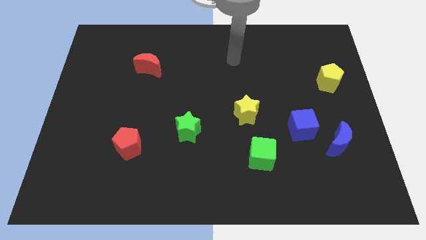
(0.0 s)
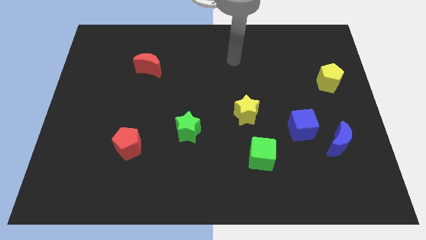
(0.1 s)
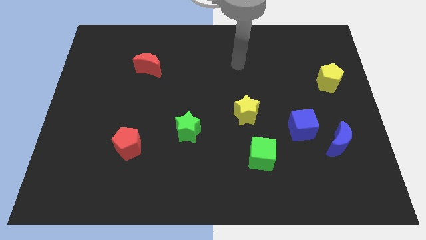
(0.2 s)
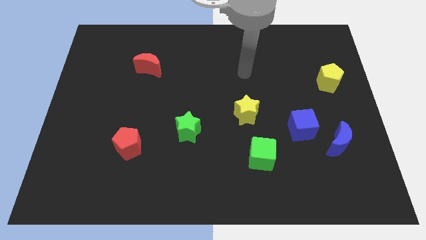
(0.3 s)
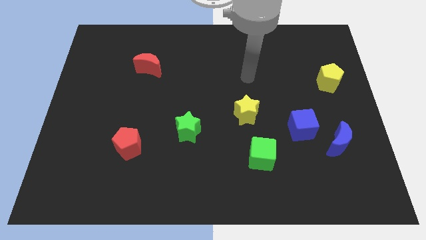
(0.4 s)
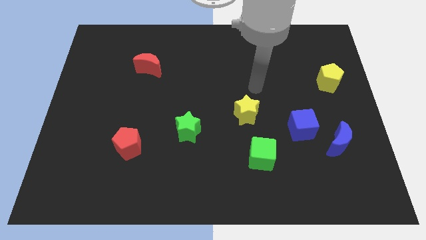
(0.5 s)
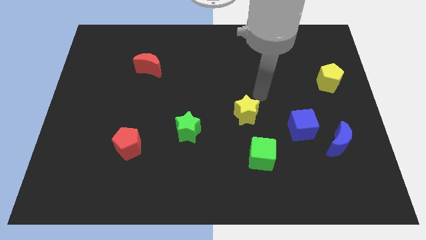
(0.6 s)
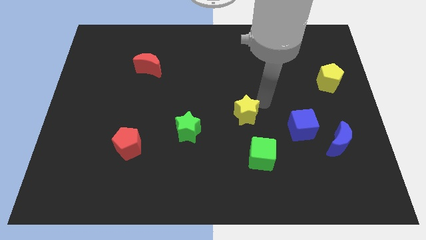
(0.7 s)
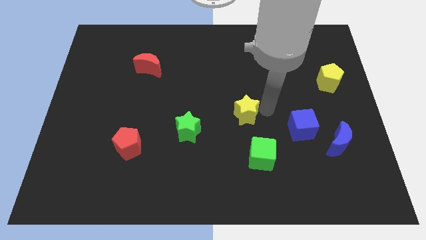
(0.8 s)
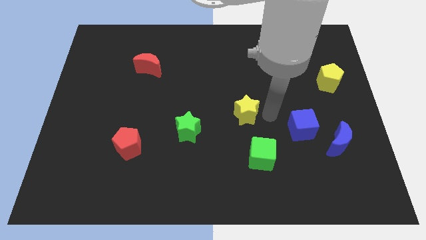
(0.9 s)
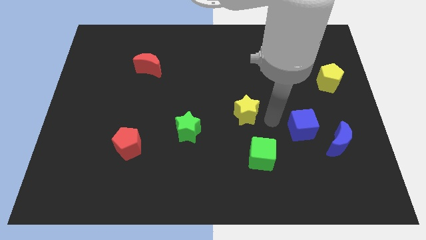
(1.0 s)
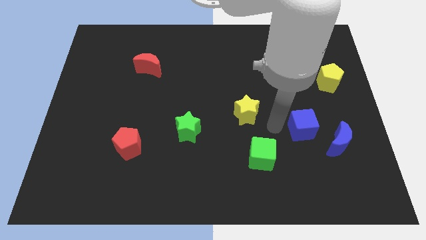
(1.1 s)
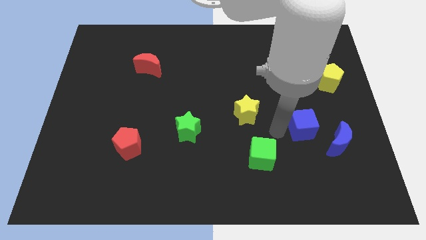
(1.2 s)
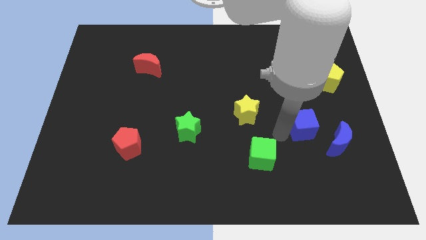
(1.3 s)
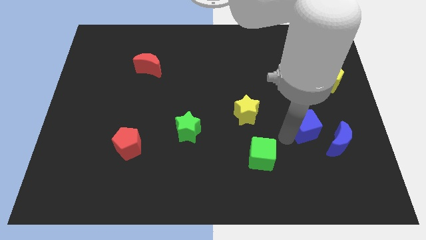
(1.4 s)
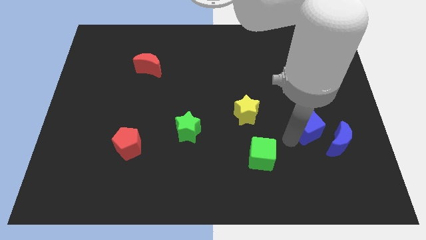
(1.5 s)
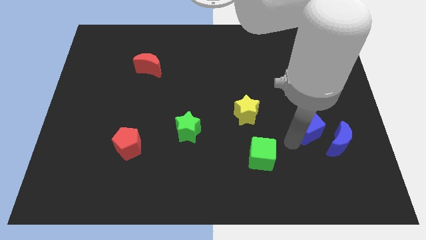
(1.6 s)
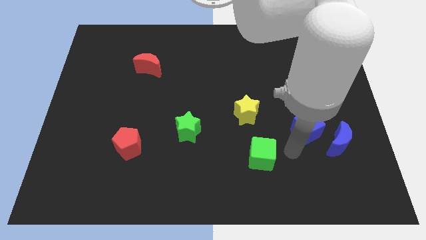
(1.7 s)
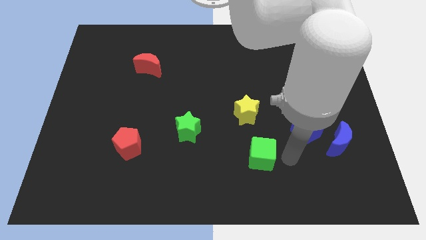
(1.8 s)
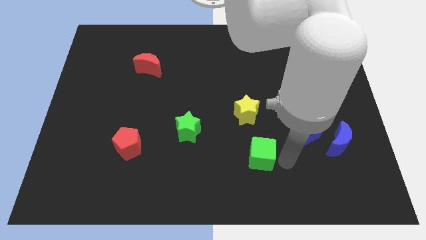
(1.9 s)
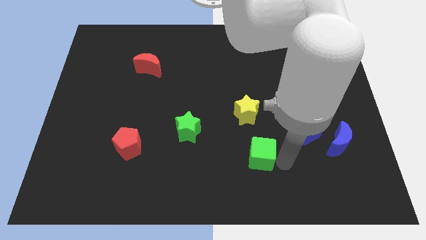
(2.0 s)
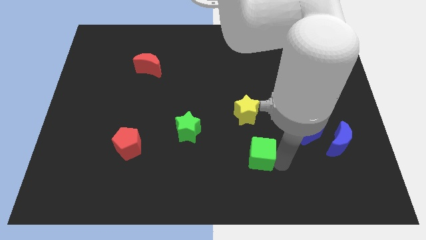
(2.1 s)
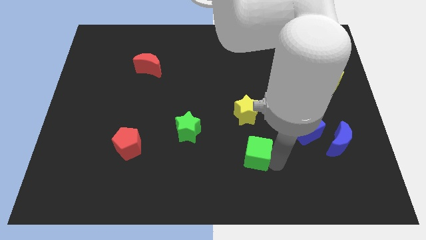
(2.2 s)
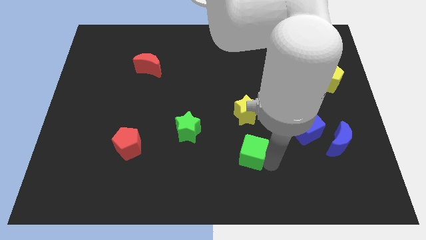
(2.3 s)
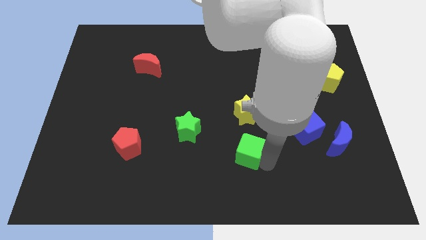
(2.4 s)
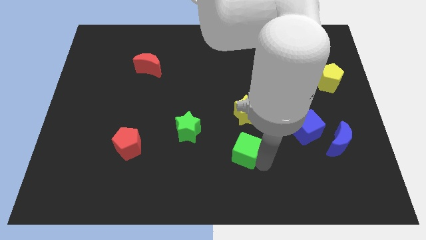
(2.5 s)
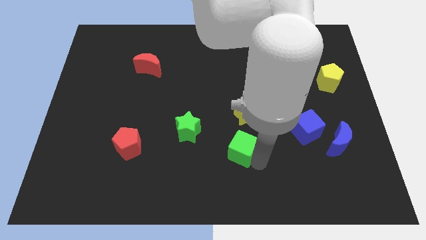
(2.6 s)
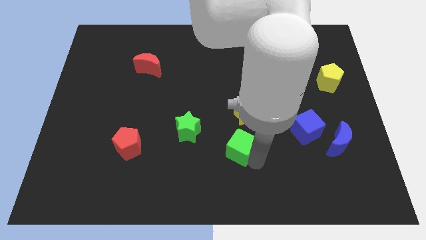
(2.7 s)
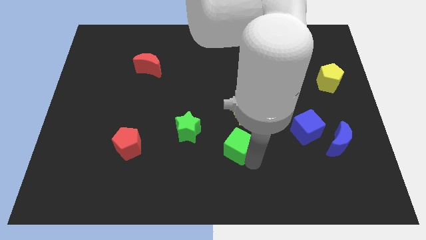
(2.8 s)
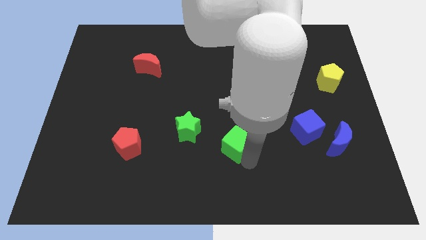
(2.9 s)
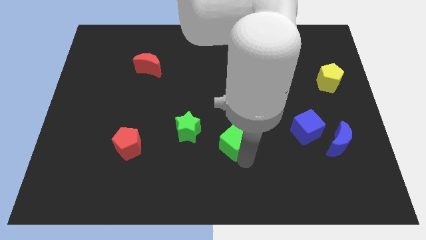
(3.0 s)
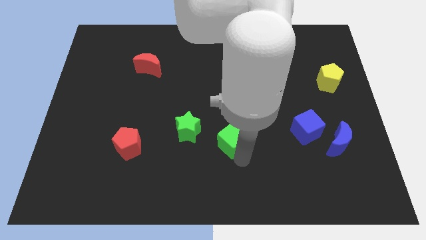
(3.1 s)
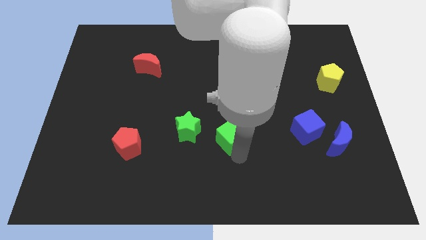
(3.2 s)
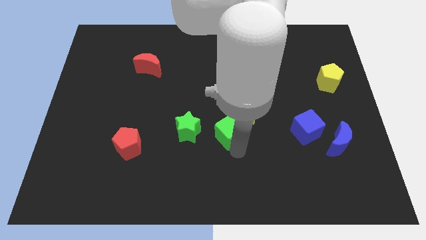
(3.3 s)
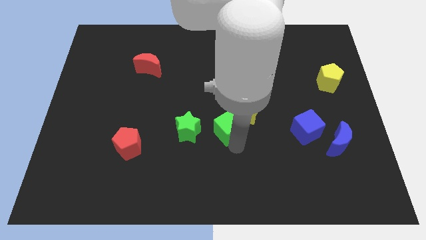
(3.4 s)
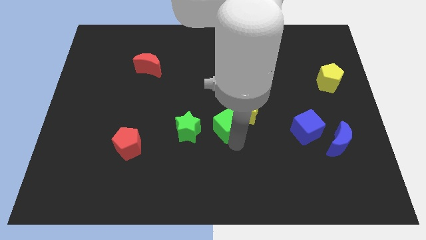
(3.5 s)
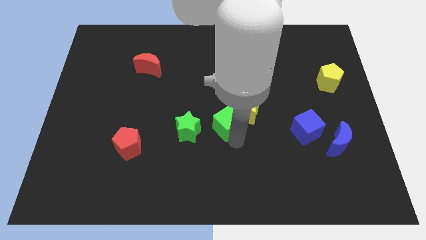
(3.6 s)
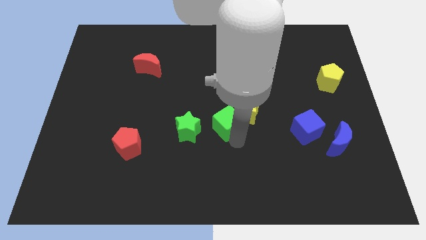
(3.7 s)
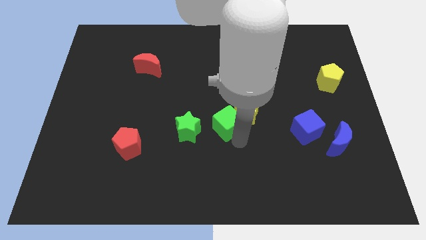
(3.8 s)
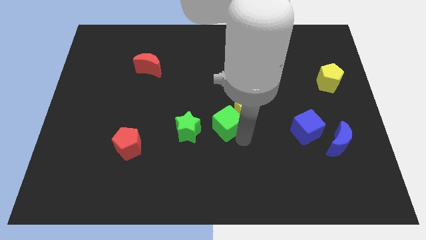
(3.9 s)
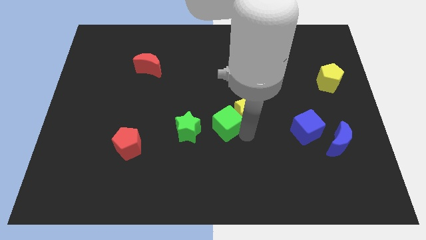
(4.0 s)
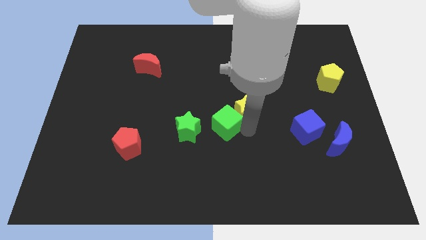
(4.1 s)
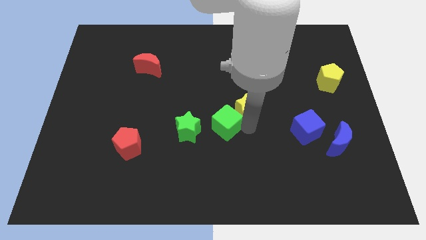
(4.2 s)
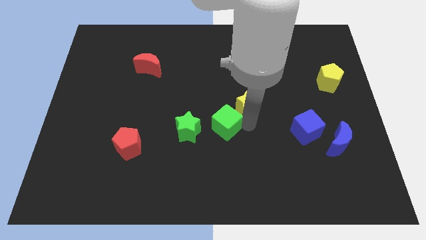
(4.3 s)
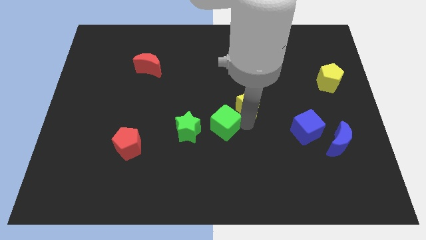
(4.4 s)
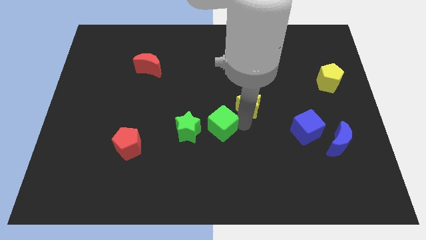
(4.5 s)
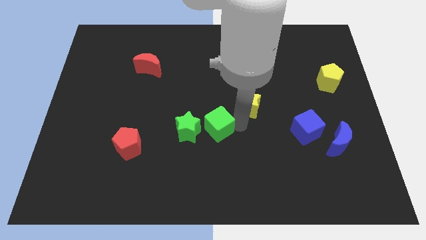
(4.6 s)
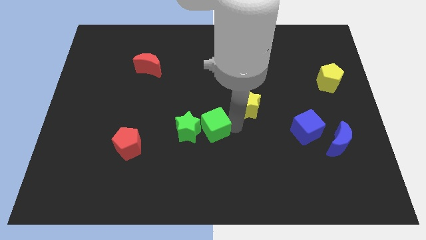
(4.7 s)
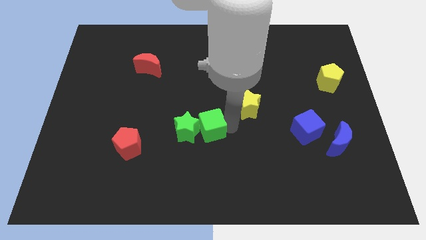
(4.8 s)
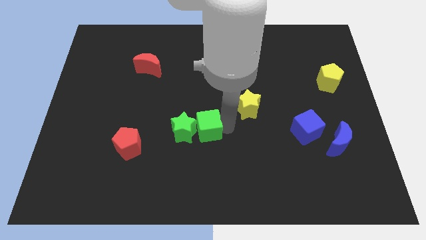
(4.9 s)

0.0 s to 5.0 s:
push the green cube next to the green star

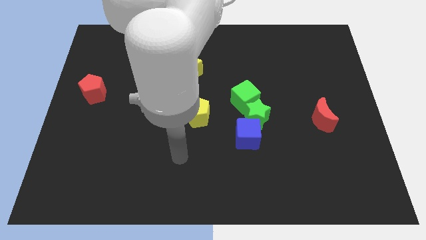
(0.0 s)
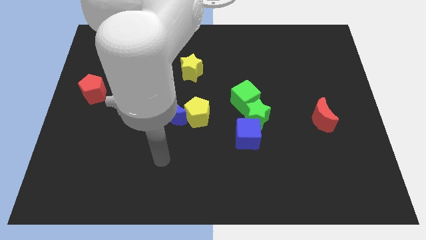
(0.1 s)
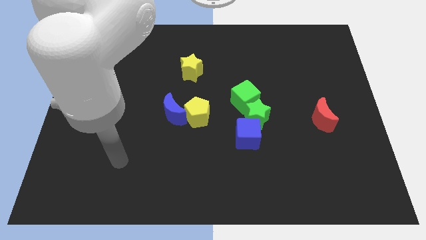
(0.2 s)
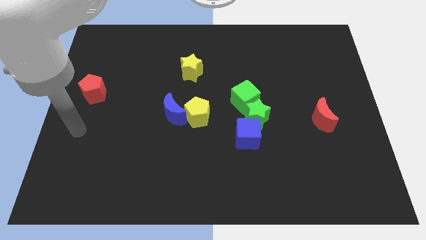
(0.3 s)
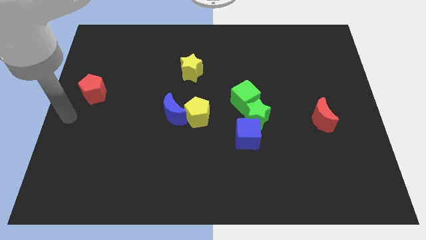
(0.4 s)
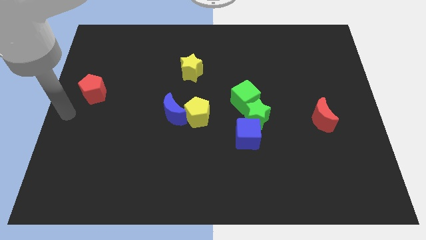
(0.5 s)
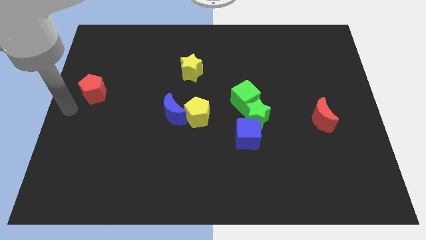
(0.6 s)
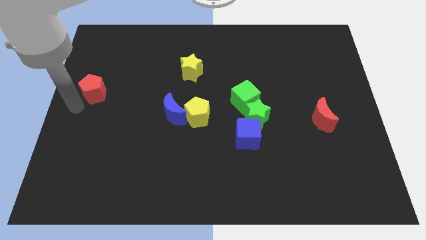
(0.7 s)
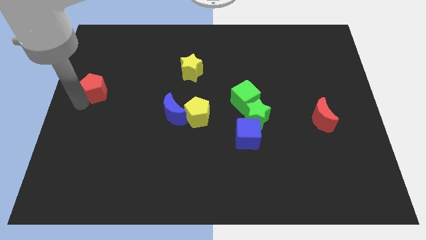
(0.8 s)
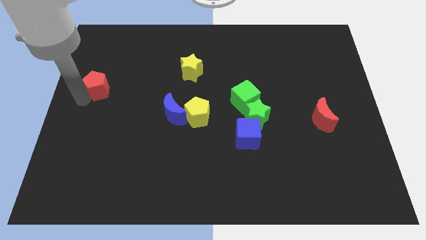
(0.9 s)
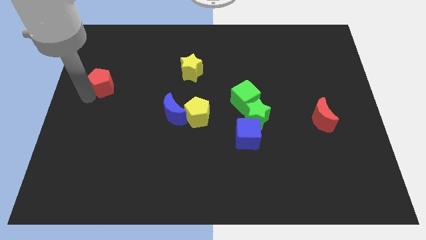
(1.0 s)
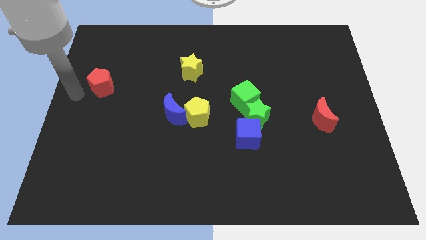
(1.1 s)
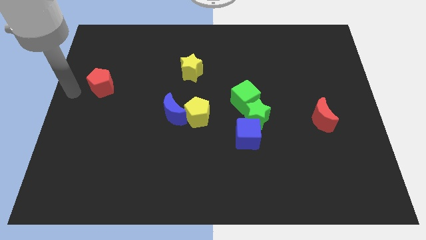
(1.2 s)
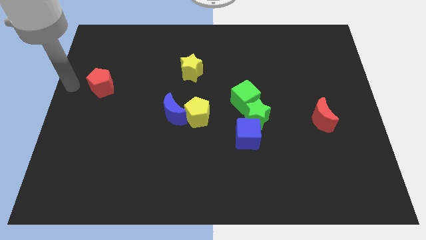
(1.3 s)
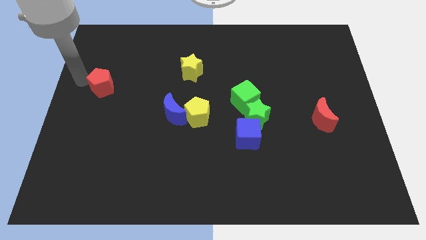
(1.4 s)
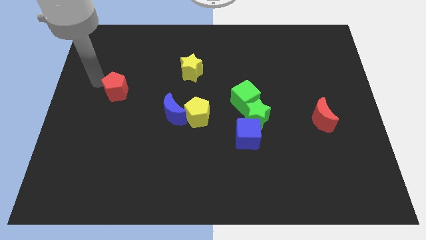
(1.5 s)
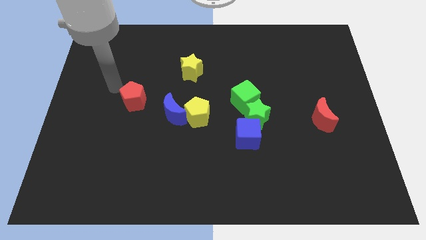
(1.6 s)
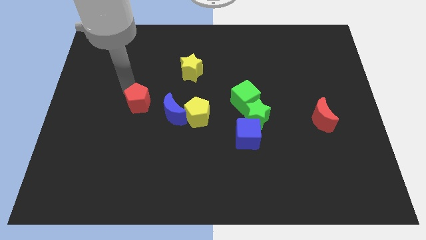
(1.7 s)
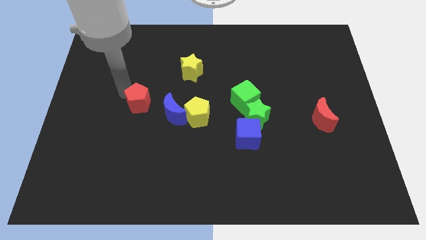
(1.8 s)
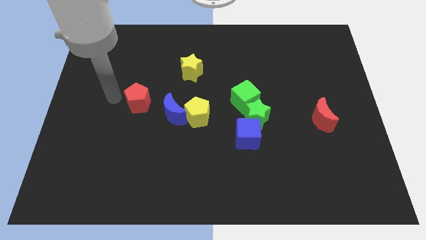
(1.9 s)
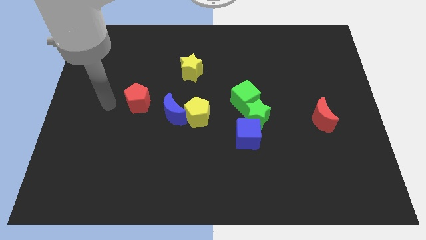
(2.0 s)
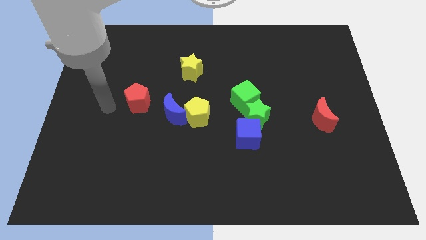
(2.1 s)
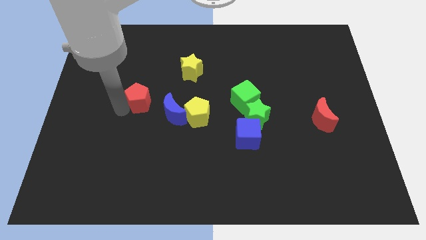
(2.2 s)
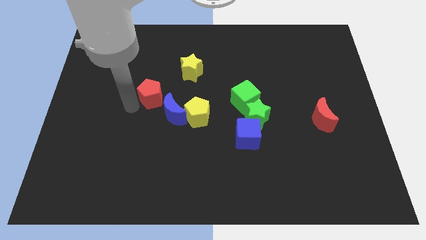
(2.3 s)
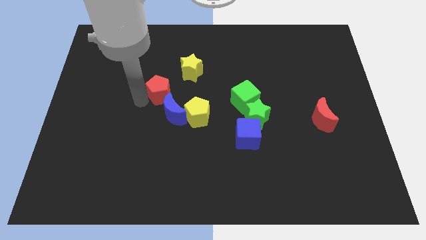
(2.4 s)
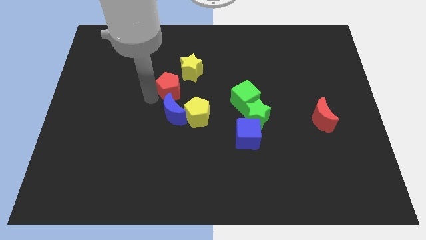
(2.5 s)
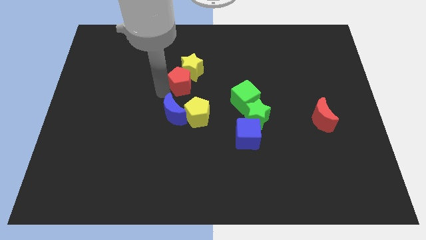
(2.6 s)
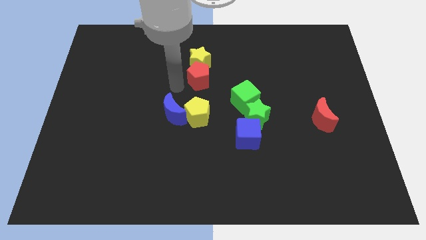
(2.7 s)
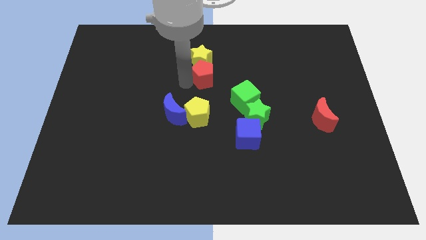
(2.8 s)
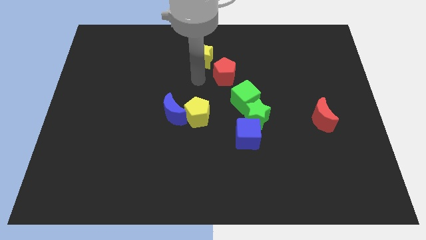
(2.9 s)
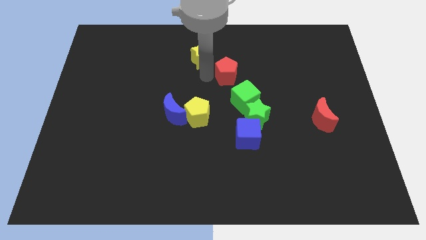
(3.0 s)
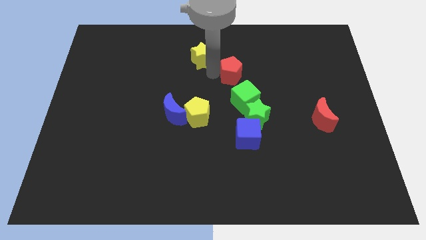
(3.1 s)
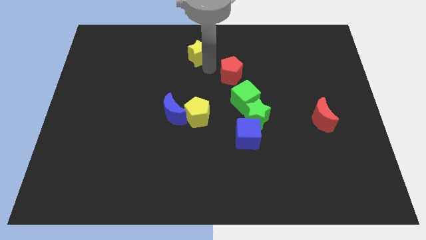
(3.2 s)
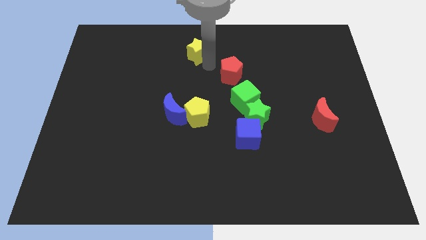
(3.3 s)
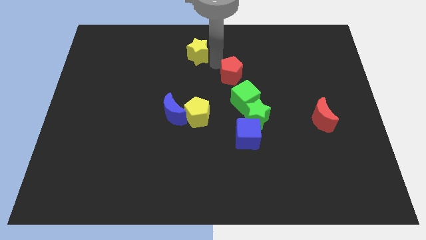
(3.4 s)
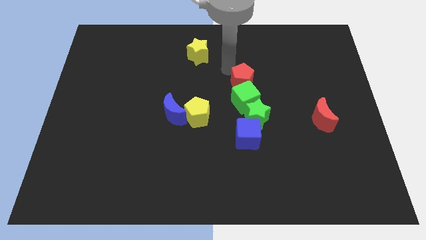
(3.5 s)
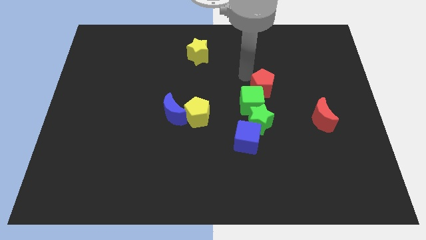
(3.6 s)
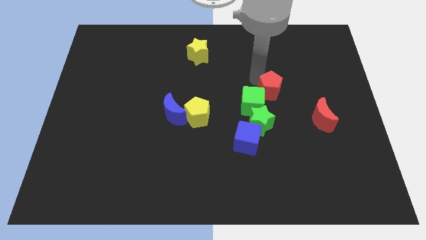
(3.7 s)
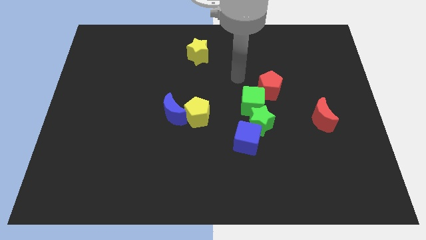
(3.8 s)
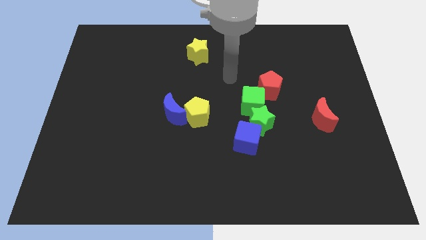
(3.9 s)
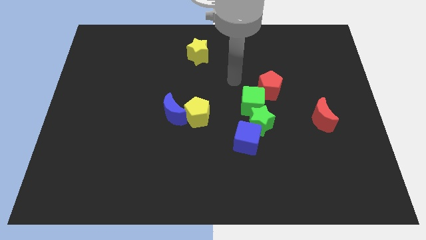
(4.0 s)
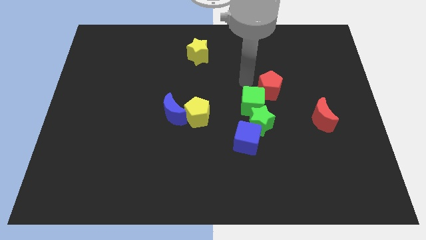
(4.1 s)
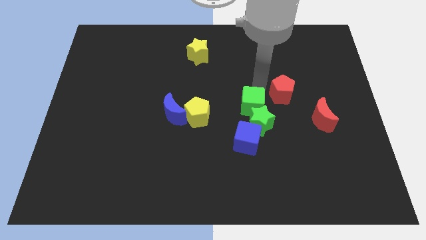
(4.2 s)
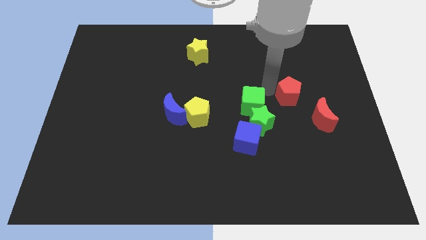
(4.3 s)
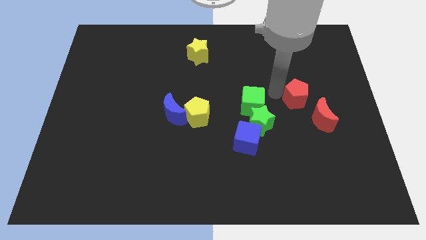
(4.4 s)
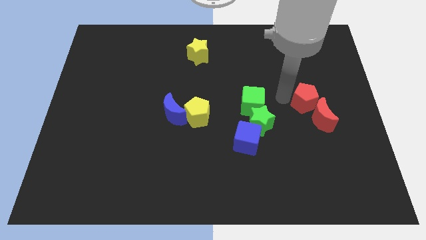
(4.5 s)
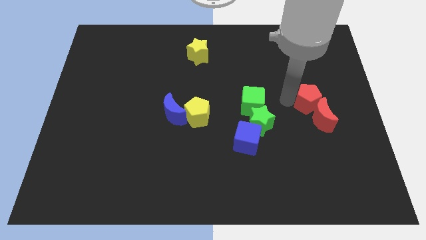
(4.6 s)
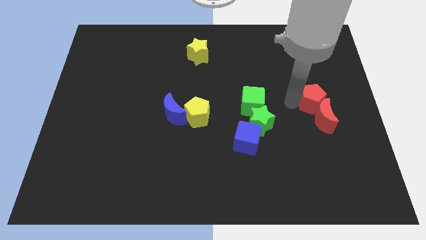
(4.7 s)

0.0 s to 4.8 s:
put the red pentagon next to the red moon
